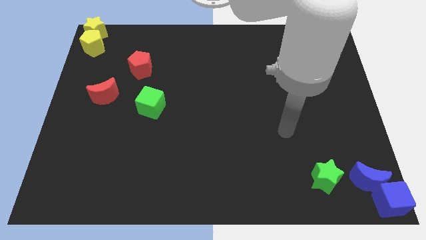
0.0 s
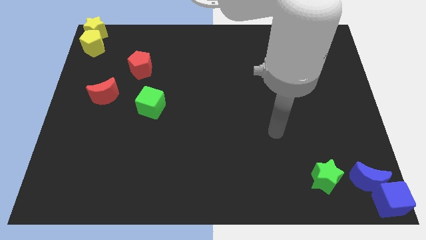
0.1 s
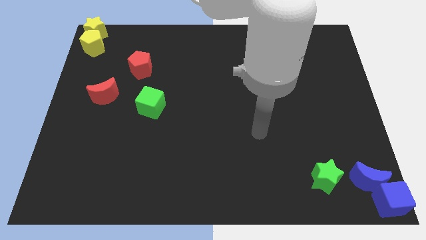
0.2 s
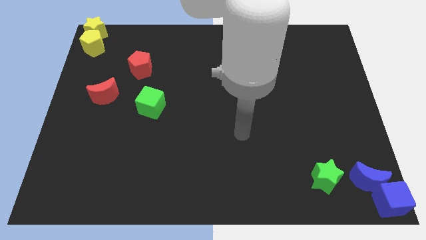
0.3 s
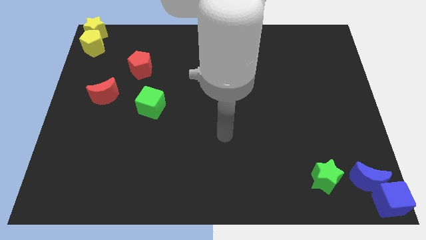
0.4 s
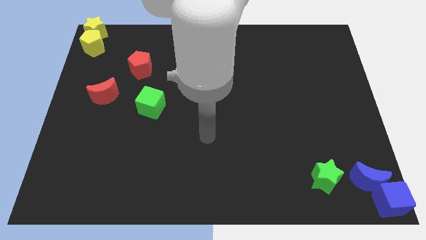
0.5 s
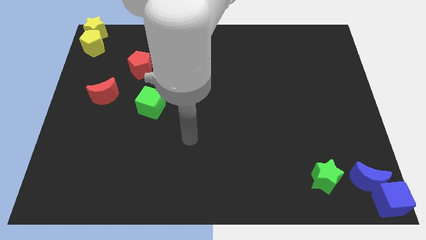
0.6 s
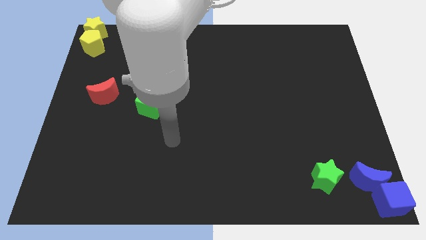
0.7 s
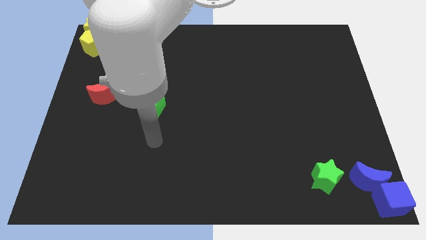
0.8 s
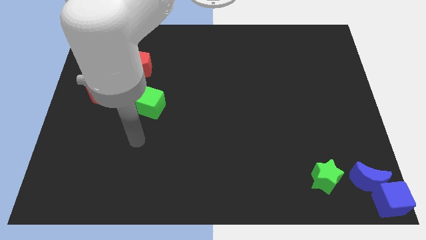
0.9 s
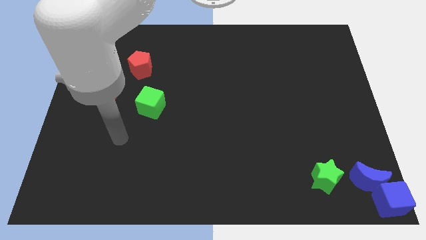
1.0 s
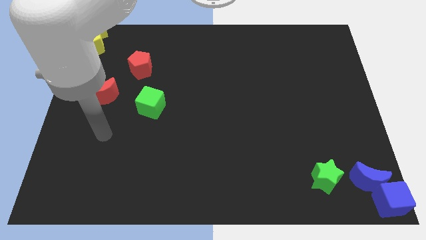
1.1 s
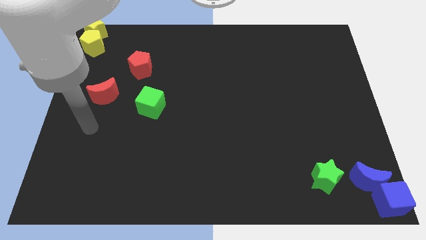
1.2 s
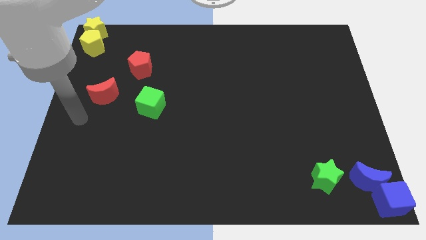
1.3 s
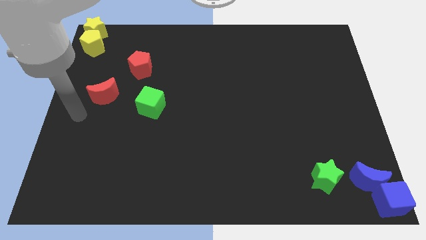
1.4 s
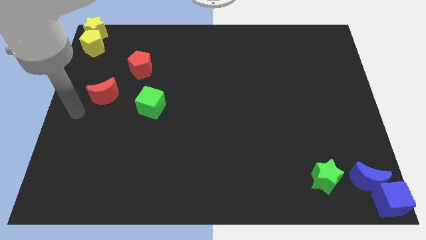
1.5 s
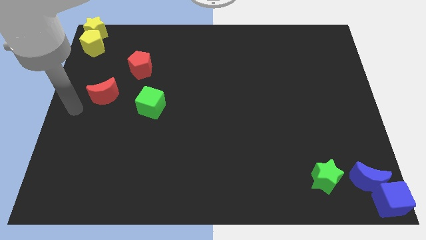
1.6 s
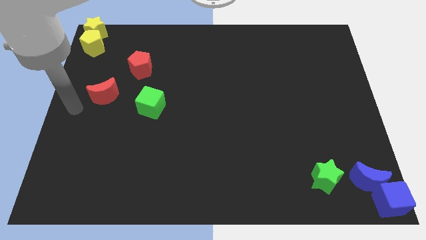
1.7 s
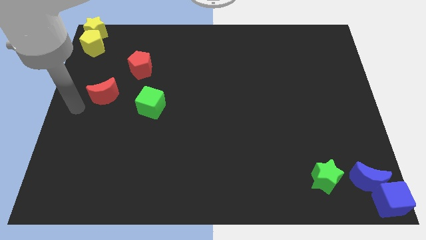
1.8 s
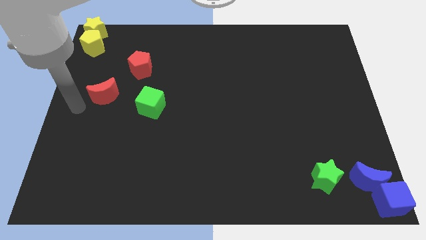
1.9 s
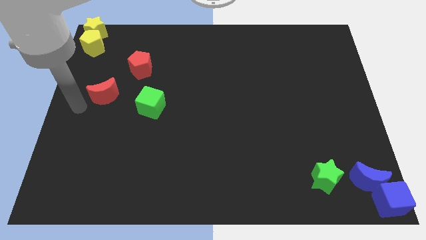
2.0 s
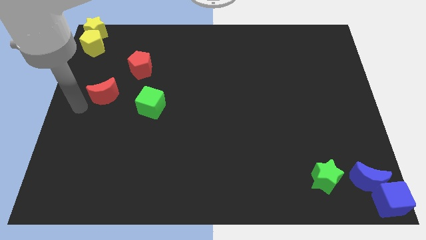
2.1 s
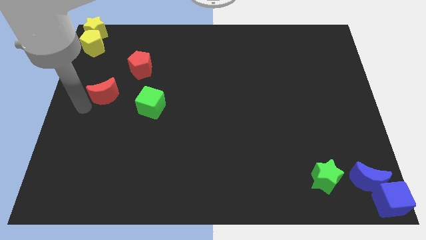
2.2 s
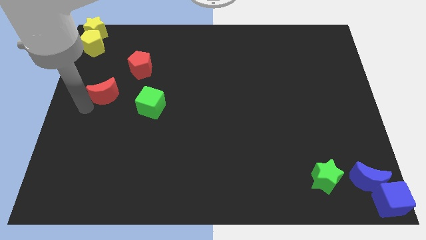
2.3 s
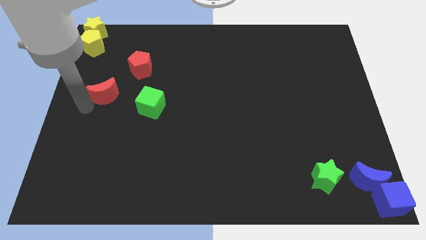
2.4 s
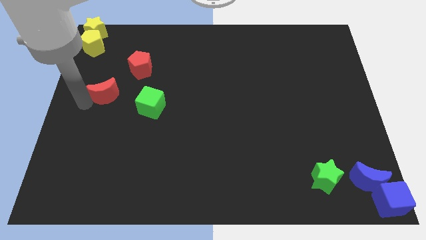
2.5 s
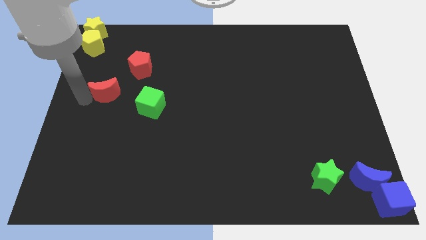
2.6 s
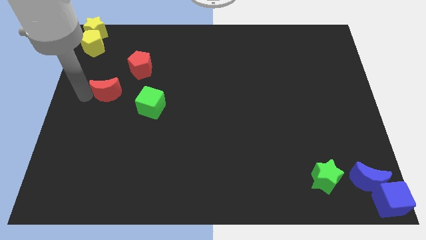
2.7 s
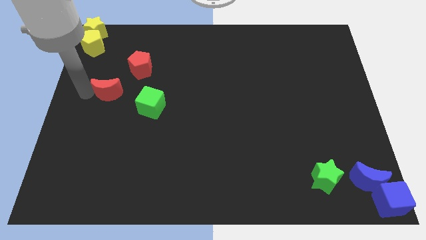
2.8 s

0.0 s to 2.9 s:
touch the red crescent with the arm

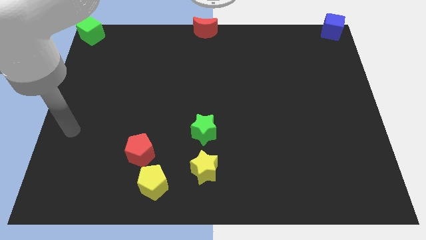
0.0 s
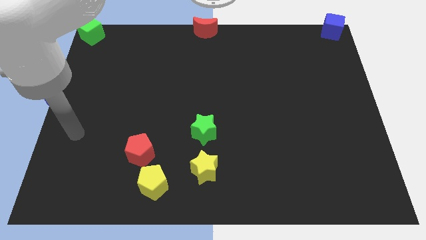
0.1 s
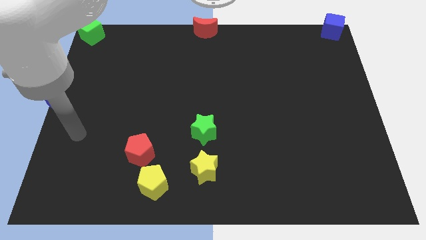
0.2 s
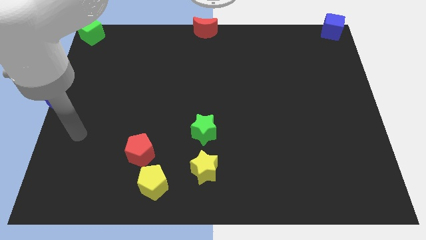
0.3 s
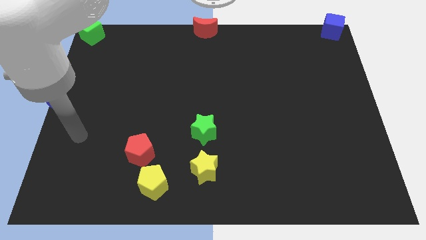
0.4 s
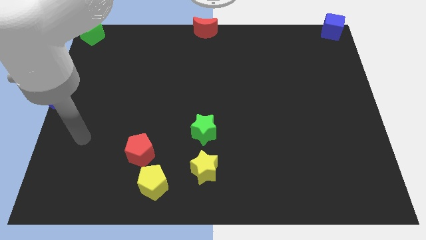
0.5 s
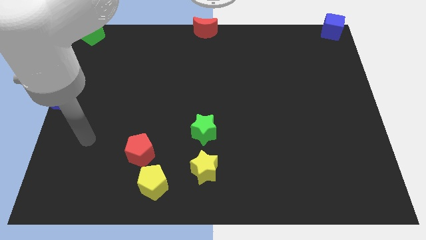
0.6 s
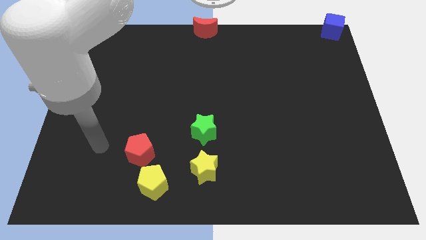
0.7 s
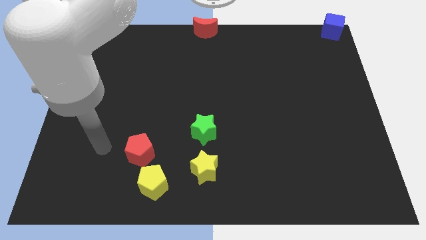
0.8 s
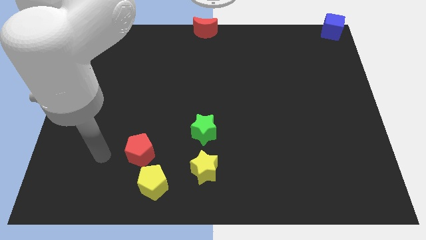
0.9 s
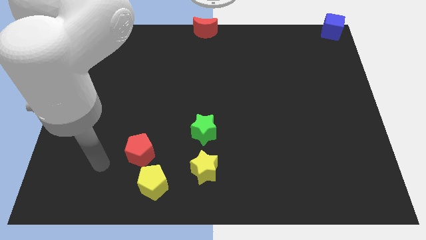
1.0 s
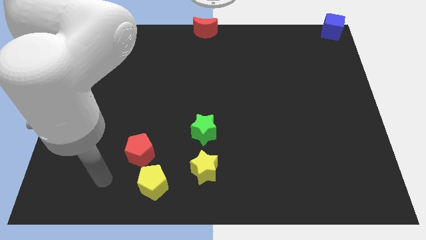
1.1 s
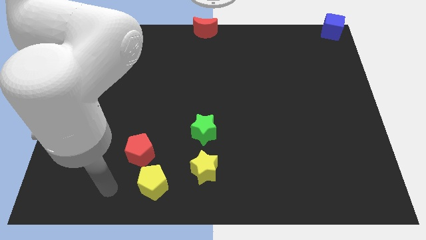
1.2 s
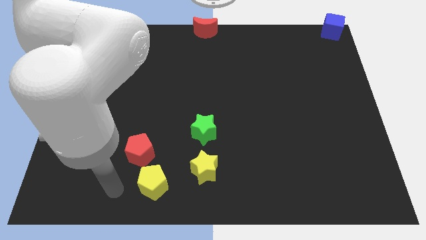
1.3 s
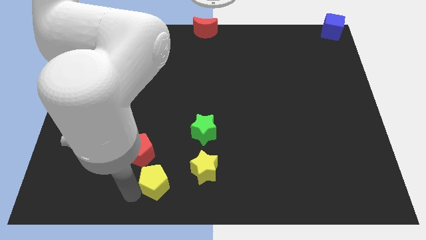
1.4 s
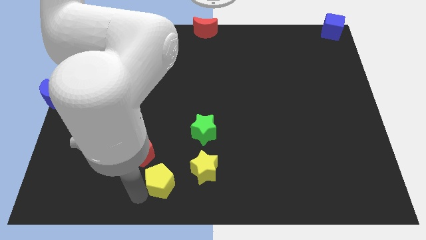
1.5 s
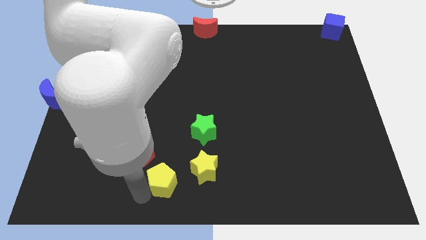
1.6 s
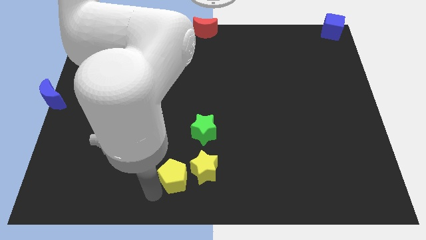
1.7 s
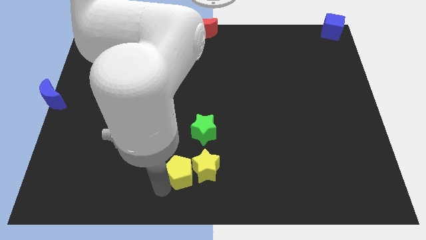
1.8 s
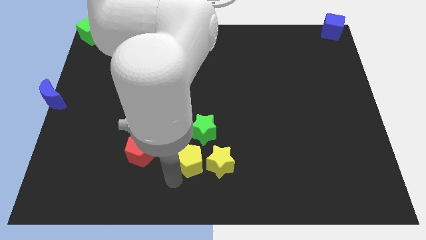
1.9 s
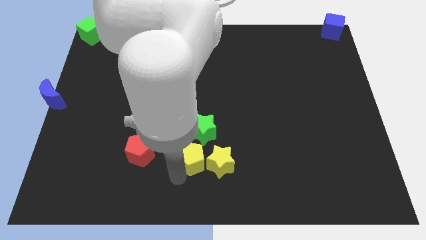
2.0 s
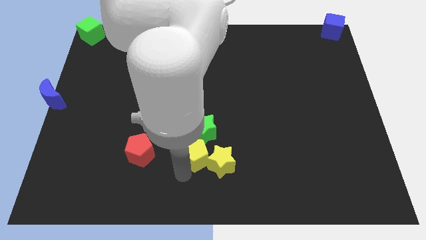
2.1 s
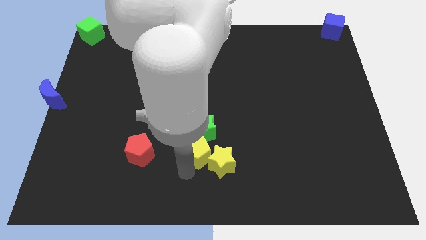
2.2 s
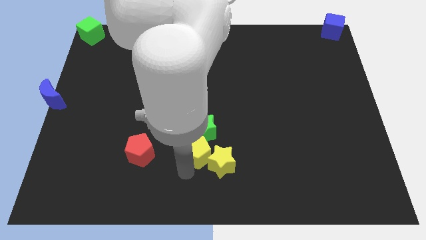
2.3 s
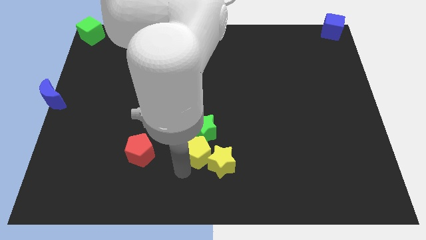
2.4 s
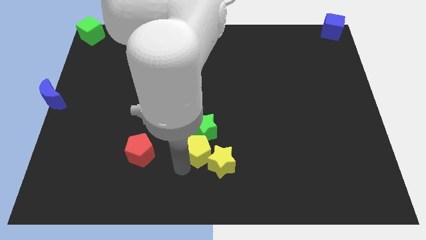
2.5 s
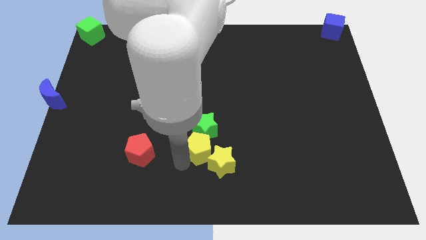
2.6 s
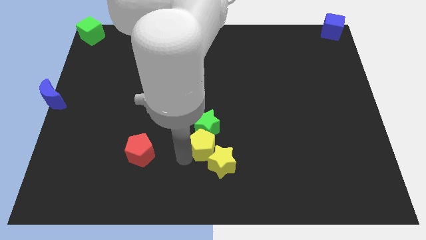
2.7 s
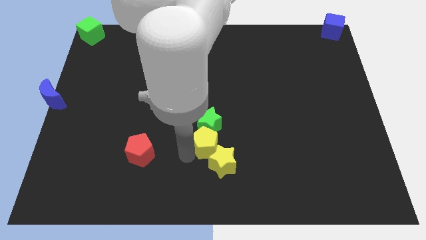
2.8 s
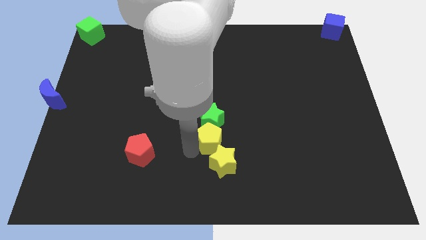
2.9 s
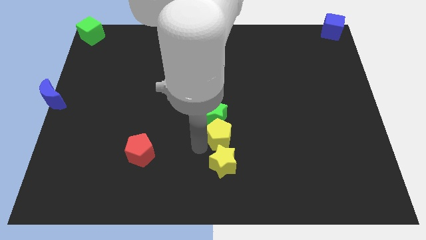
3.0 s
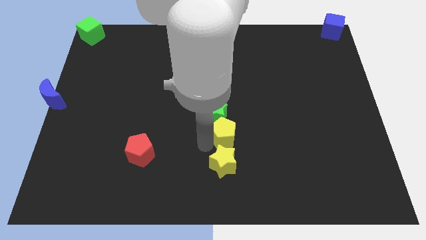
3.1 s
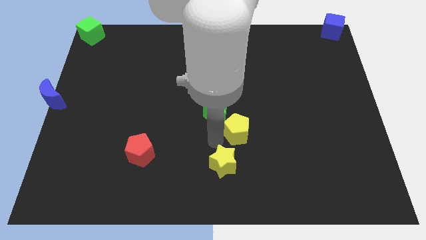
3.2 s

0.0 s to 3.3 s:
form a vertical line by moving yellow blocks and the green star

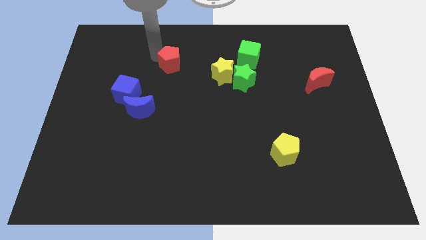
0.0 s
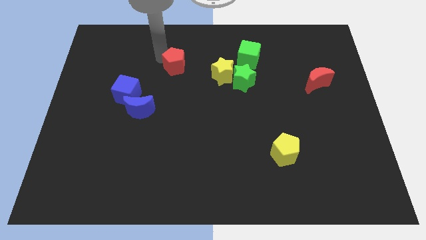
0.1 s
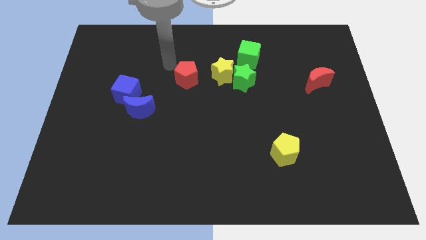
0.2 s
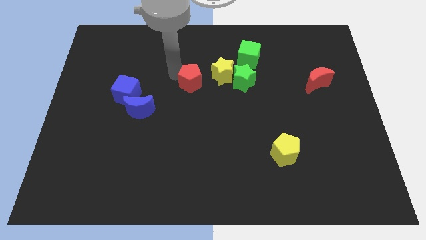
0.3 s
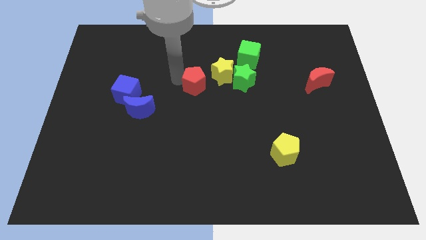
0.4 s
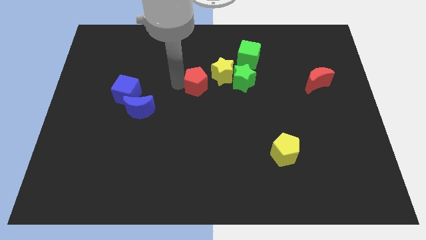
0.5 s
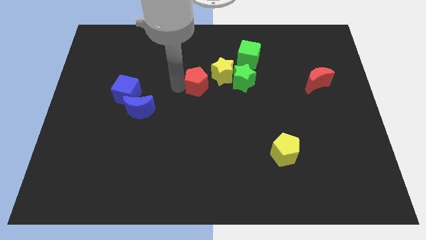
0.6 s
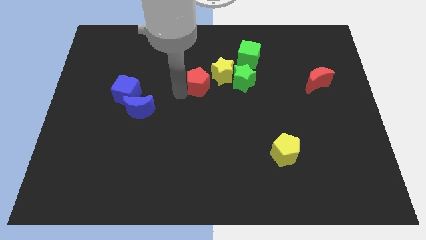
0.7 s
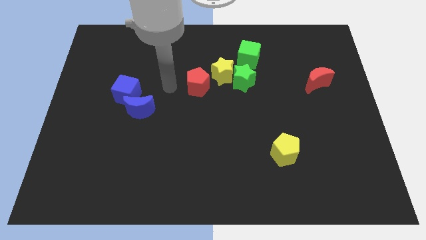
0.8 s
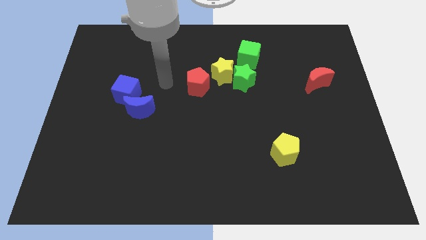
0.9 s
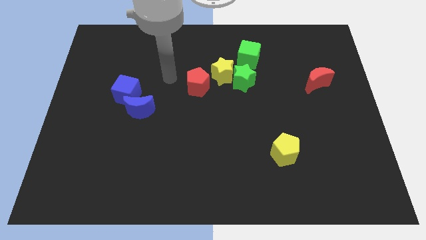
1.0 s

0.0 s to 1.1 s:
move the red pentagon near the yellow star

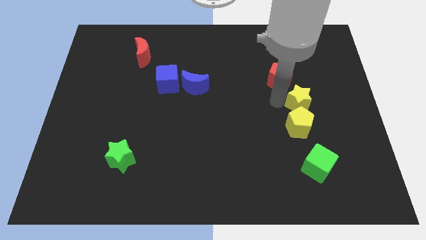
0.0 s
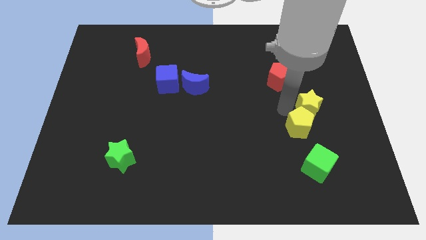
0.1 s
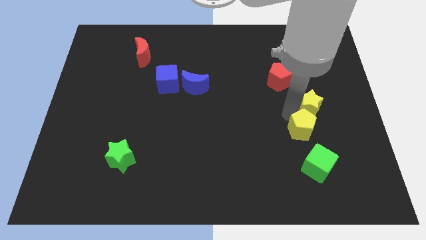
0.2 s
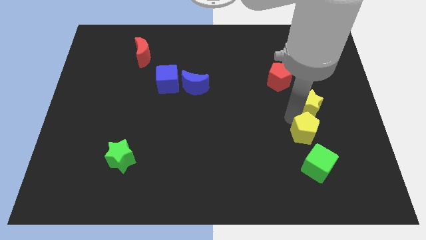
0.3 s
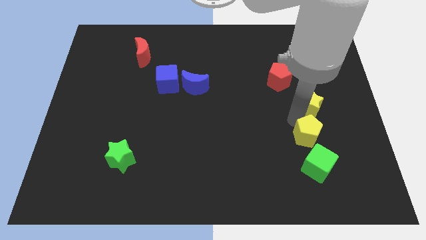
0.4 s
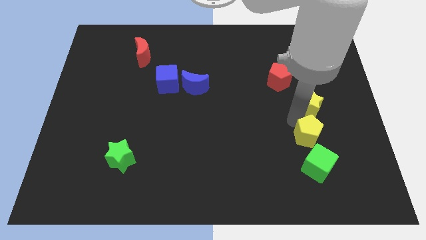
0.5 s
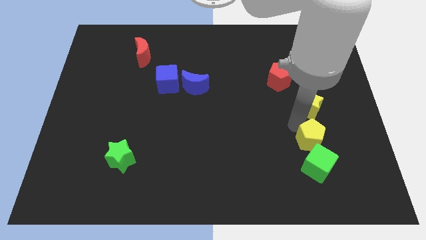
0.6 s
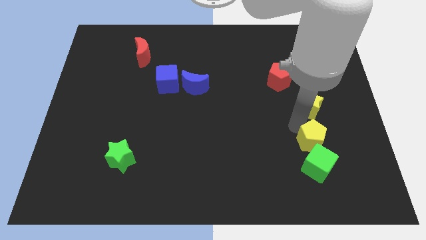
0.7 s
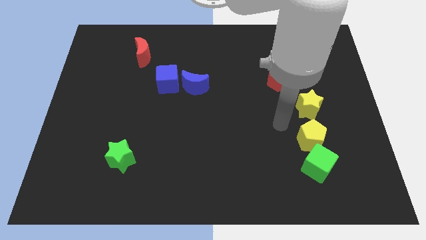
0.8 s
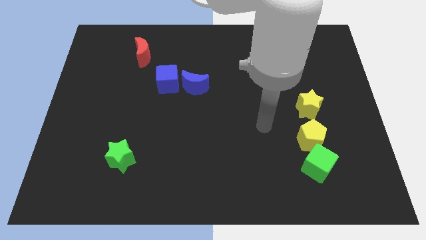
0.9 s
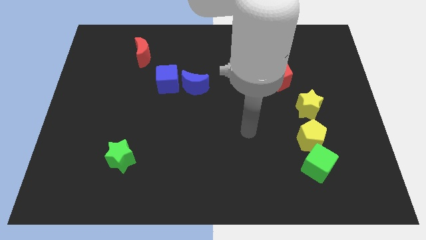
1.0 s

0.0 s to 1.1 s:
push the yellow pentagon close to the green cube

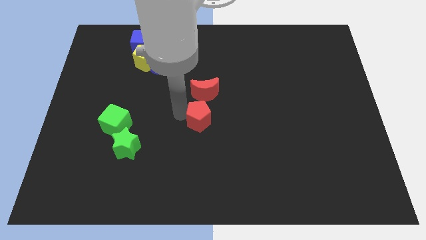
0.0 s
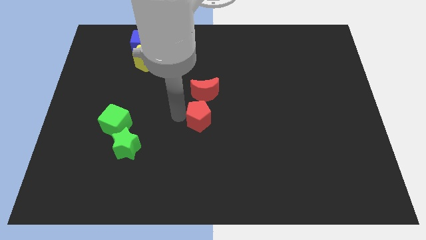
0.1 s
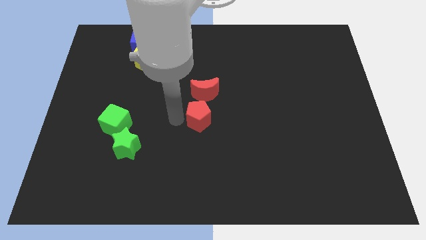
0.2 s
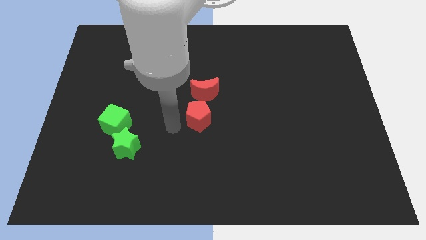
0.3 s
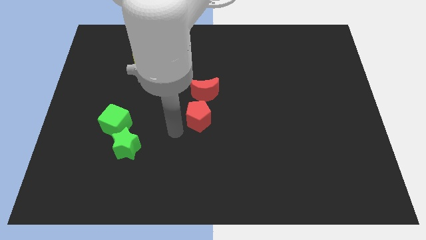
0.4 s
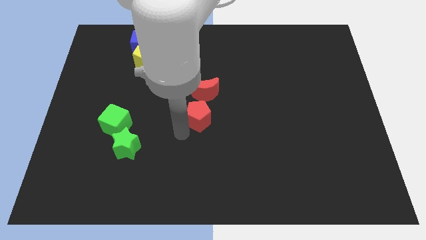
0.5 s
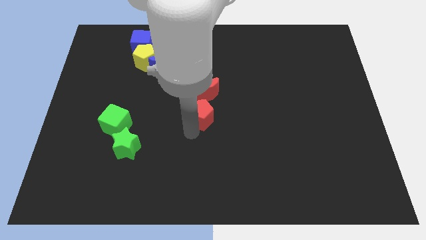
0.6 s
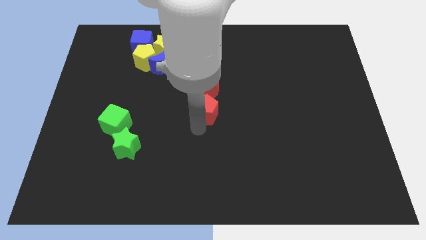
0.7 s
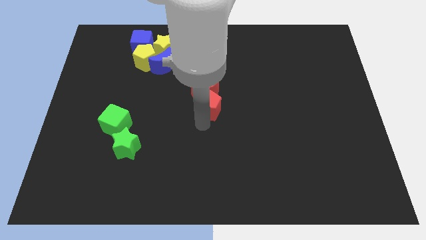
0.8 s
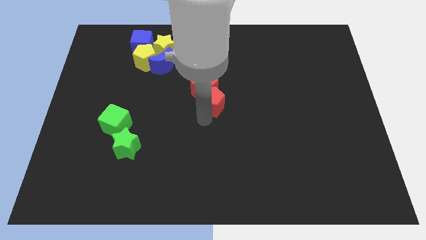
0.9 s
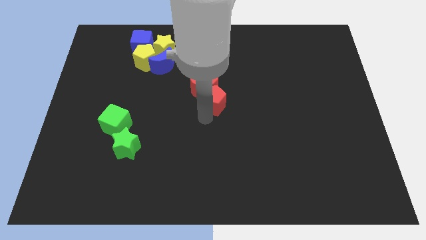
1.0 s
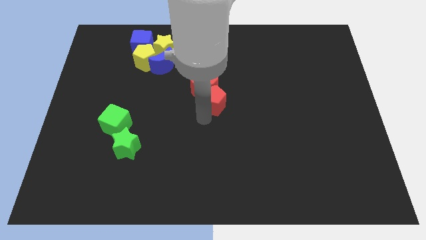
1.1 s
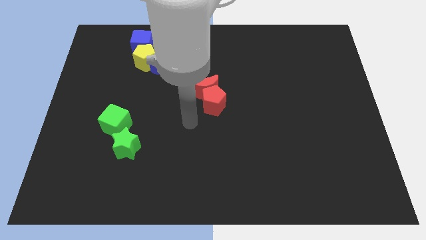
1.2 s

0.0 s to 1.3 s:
place the red pentagon below the red crescent
